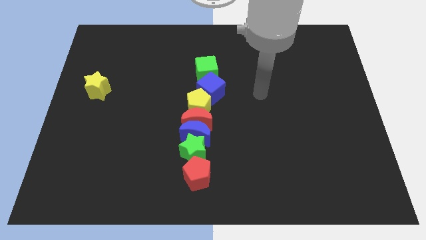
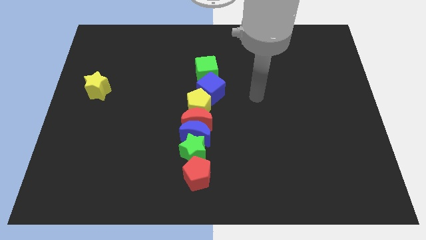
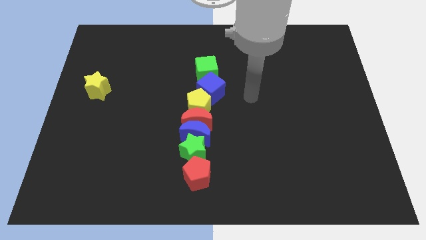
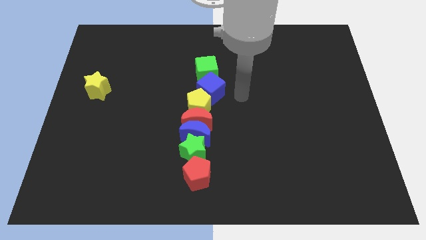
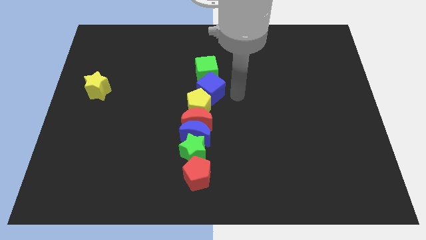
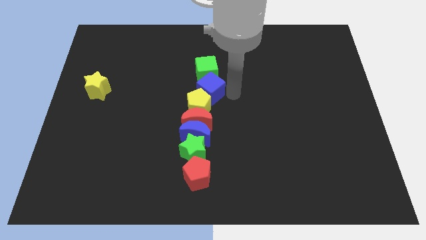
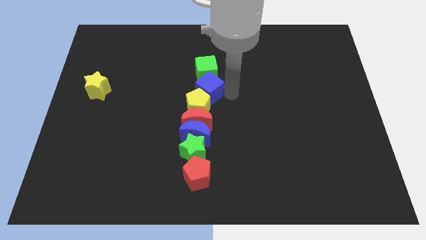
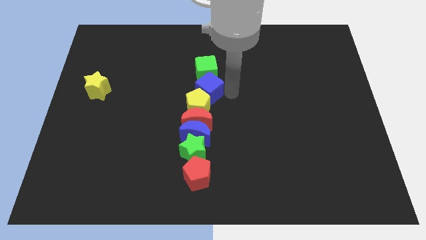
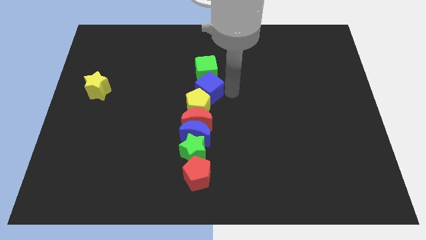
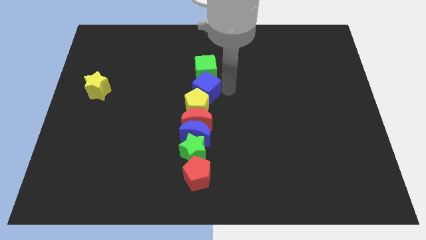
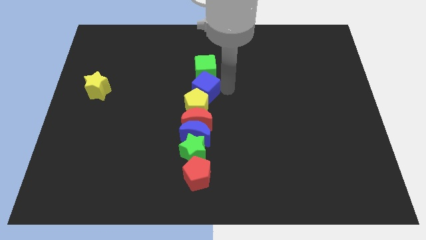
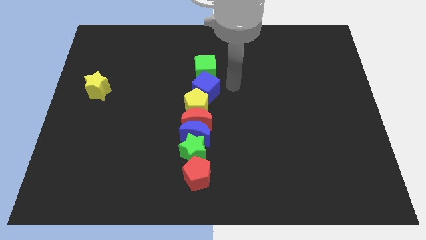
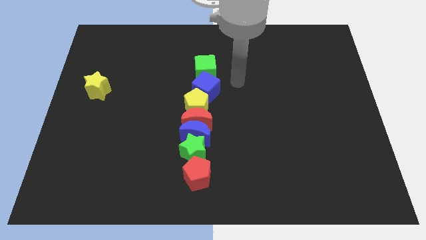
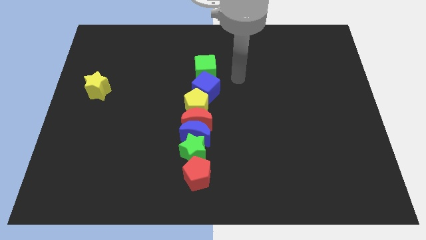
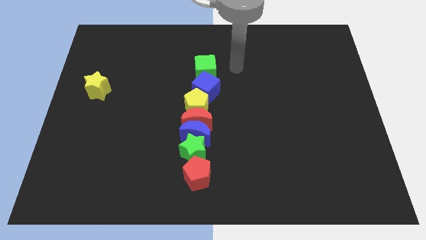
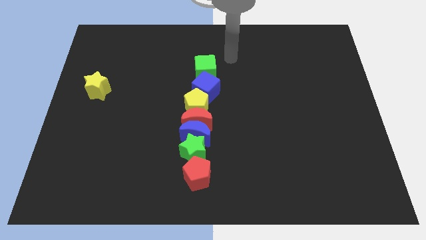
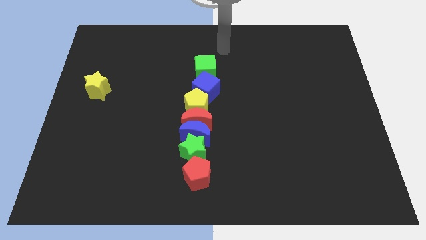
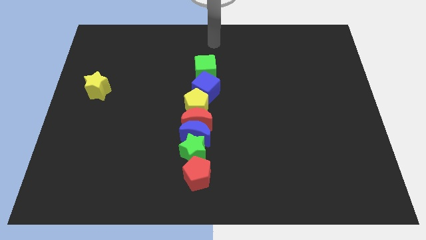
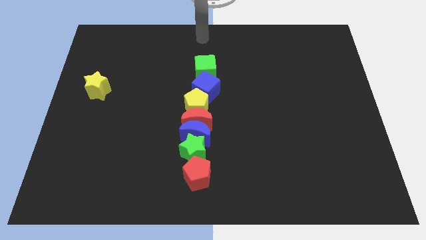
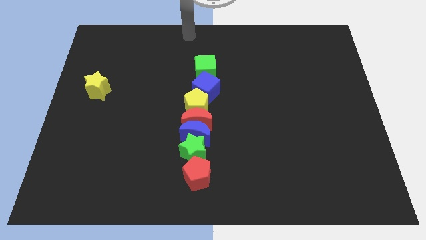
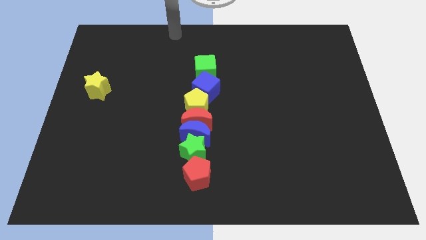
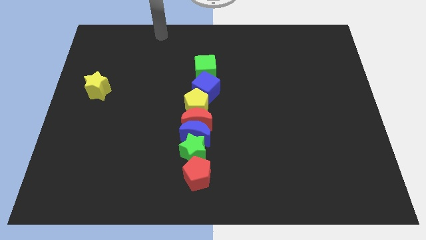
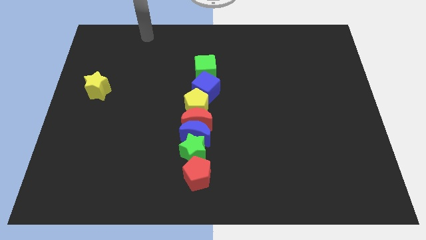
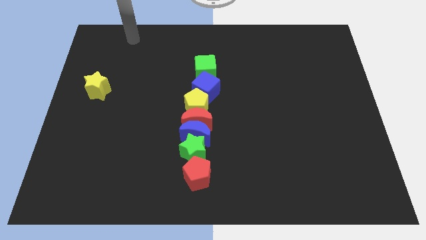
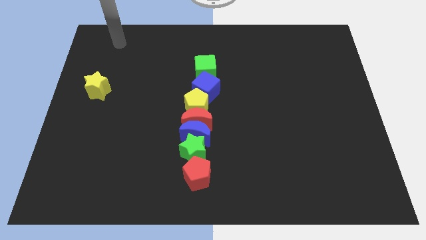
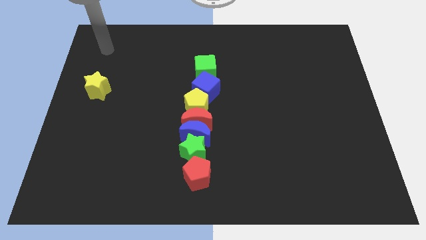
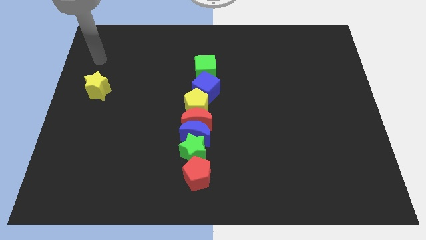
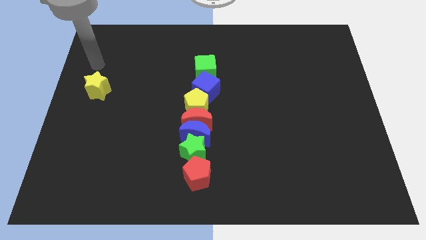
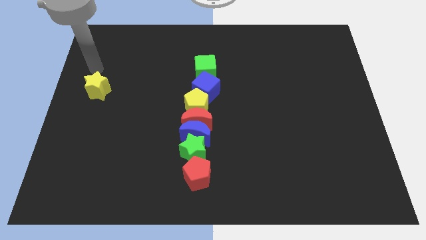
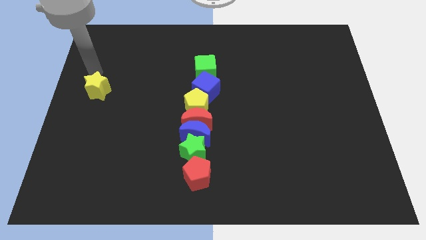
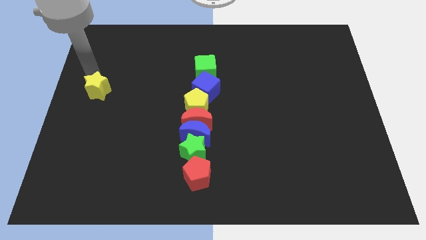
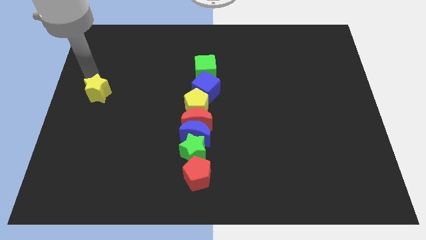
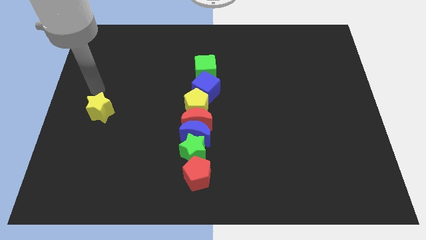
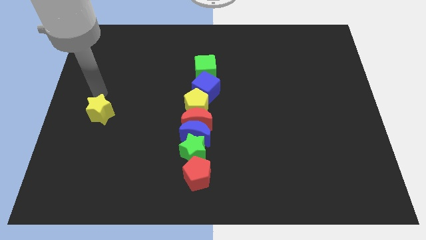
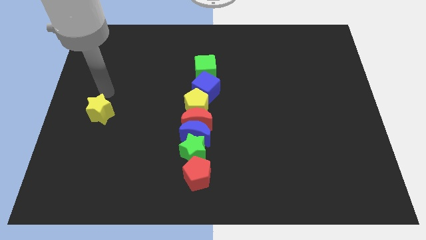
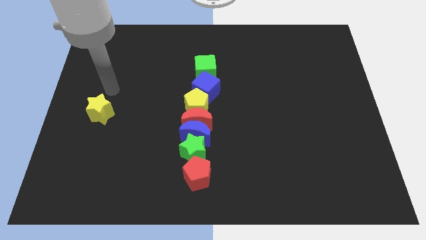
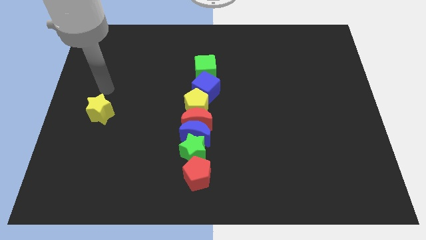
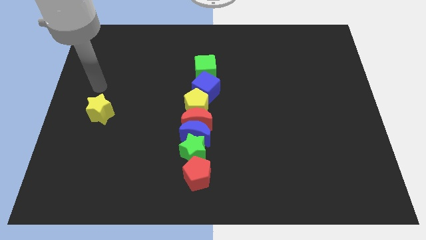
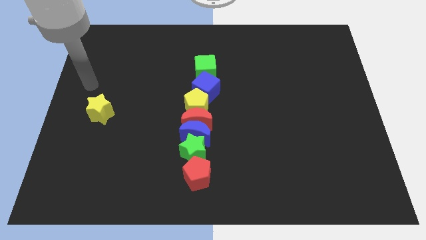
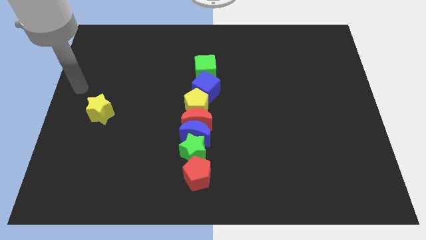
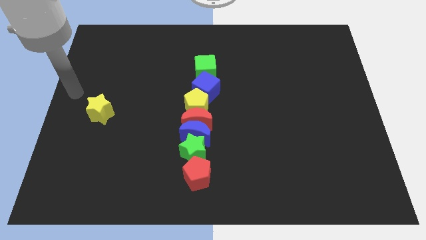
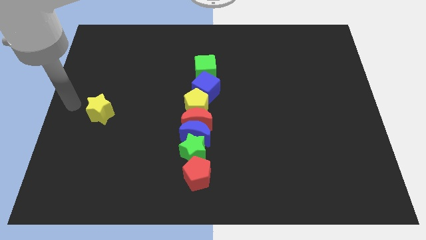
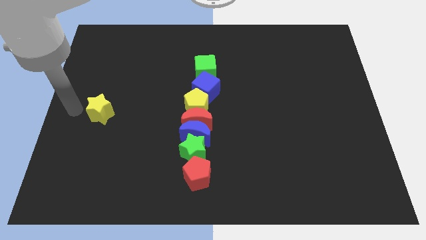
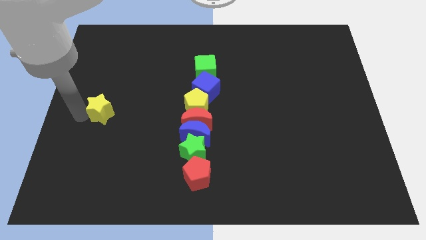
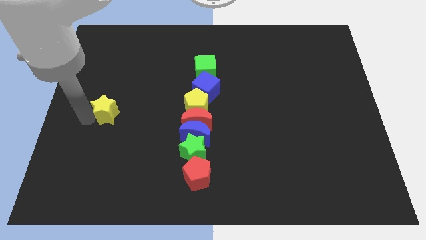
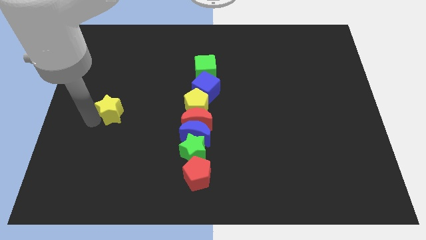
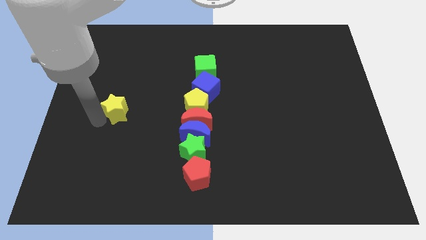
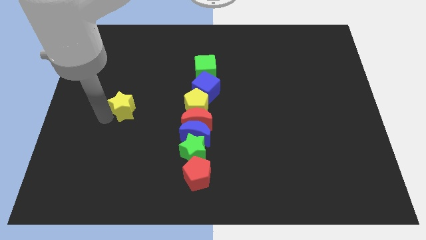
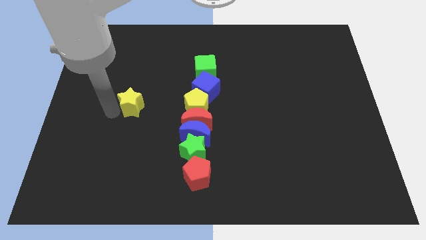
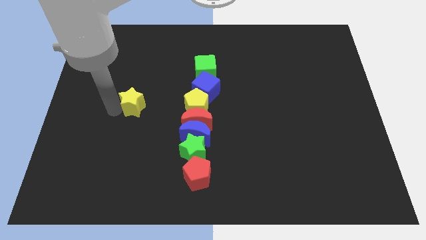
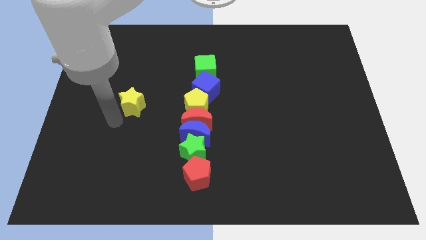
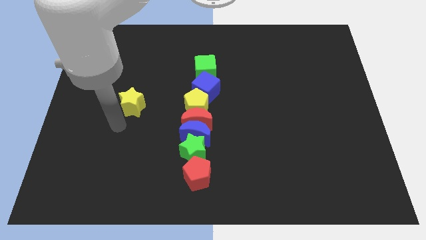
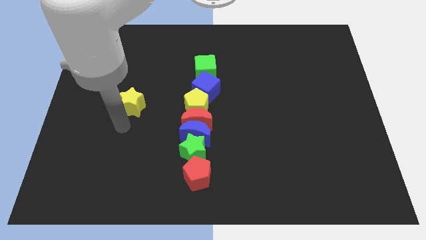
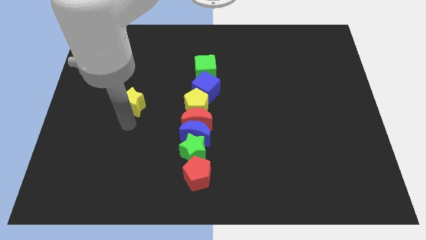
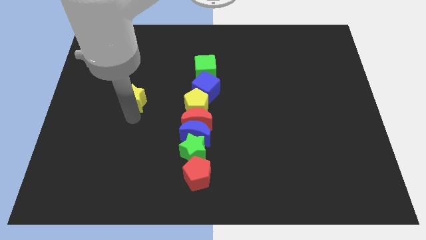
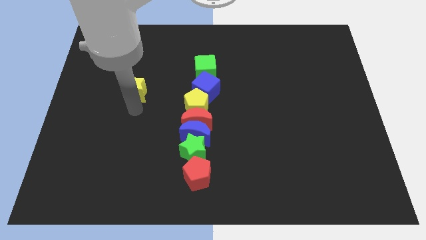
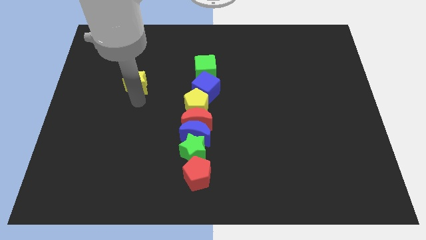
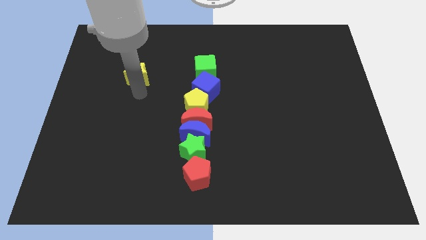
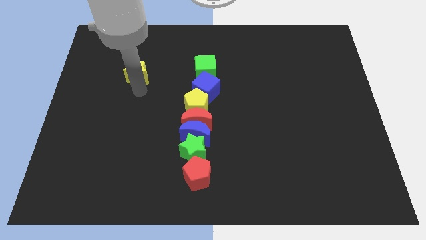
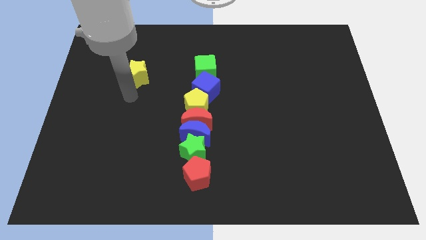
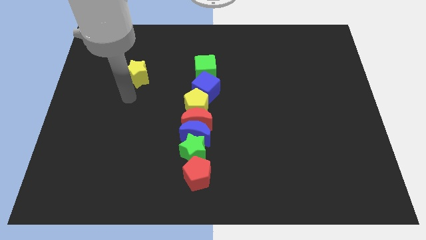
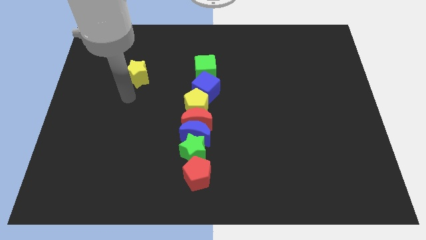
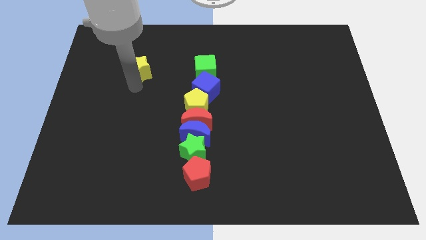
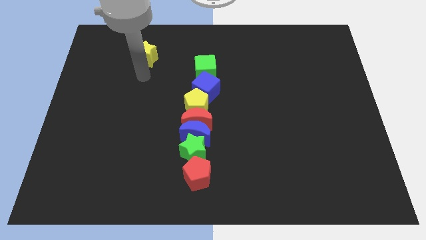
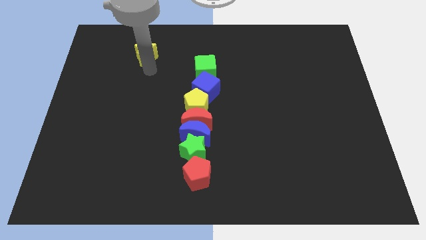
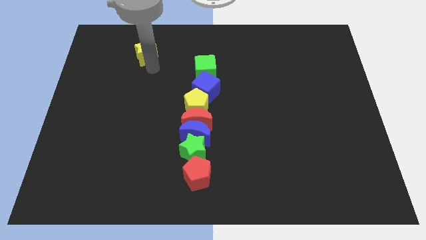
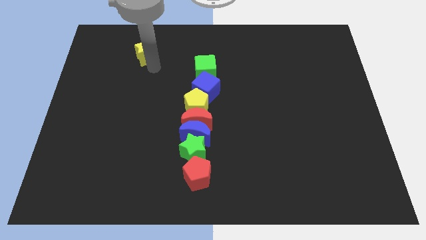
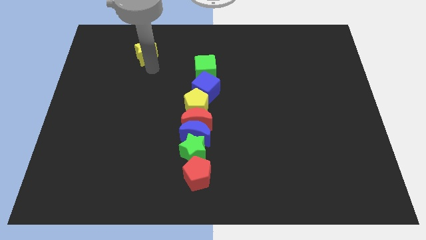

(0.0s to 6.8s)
push the yellow star diagonally top left to the green cube

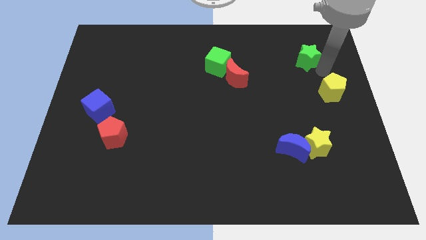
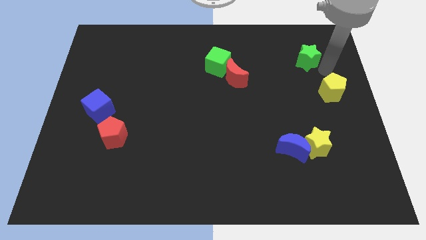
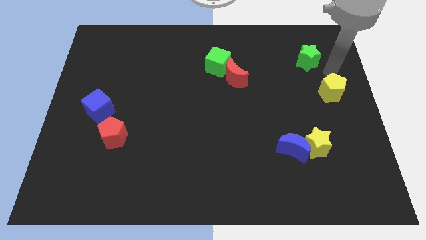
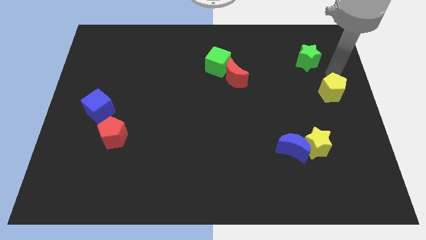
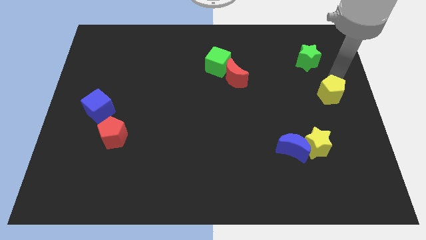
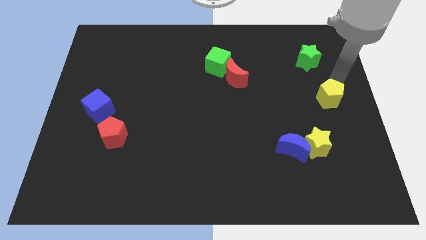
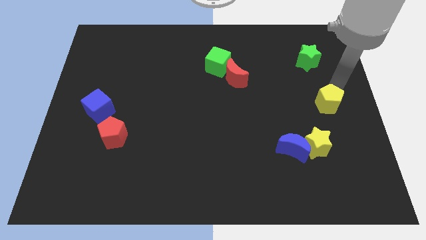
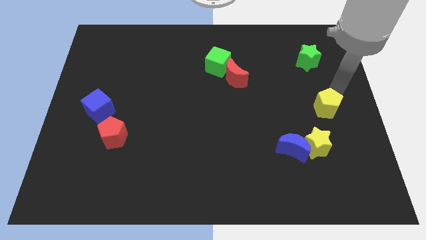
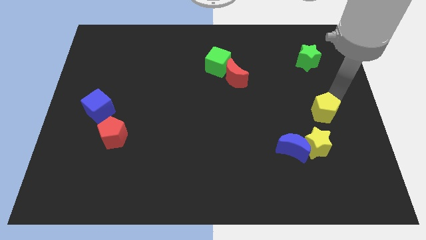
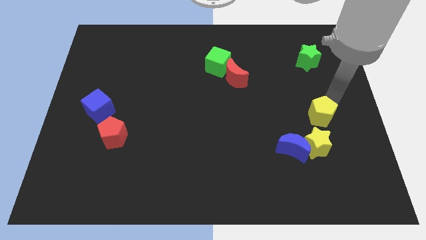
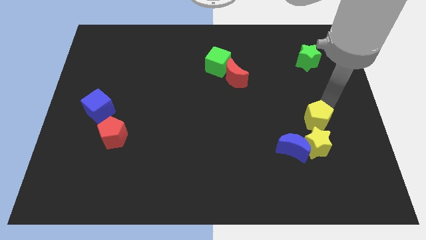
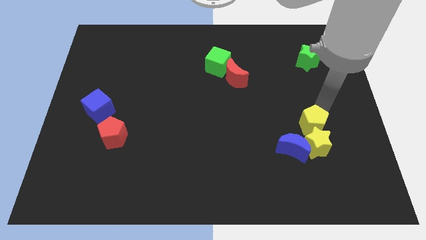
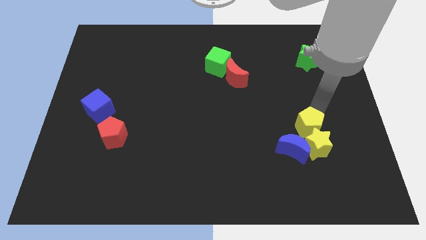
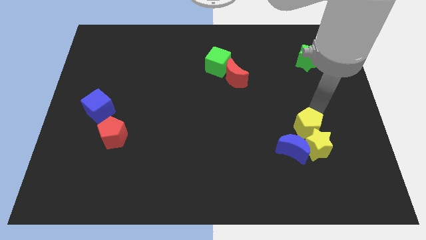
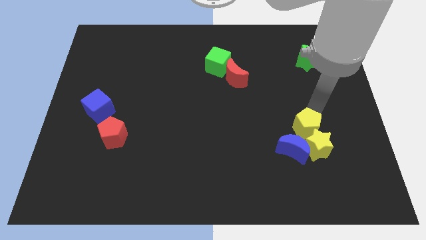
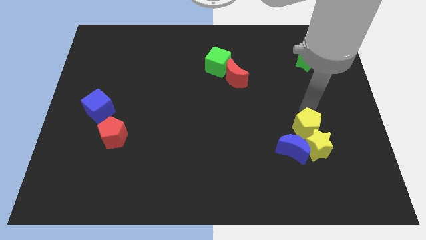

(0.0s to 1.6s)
push the yellow pentagon into the yellow star and blue moon

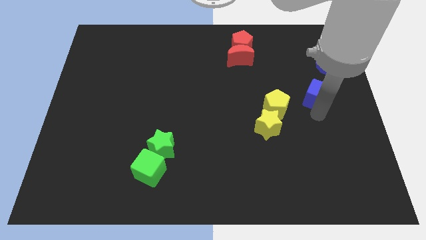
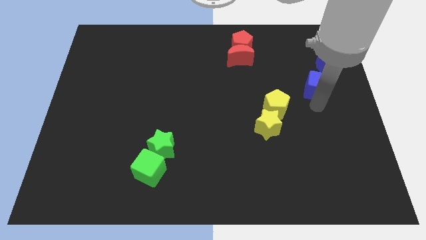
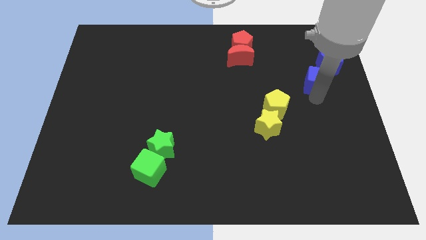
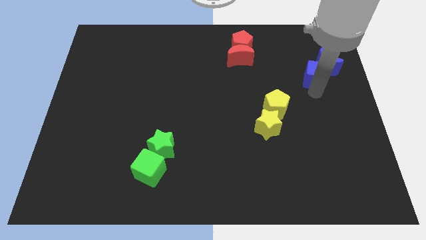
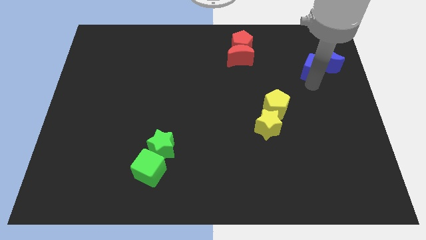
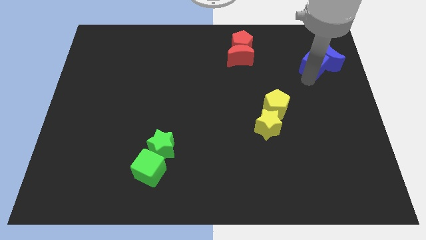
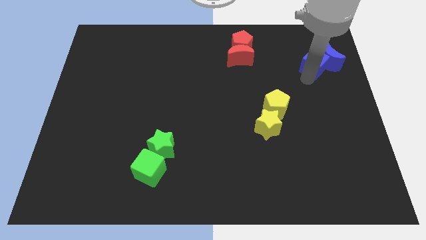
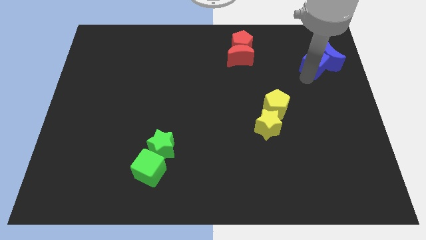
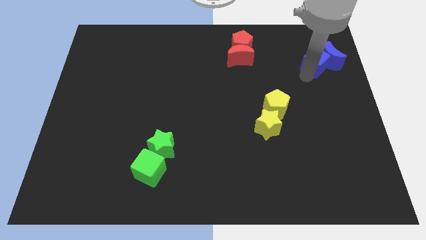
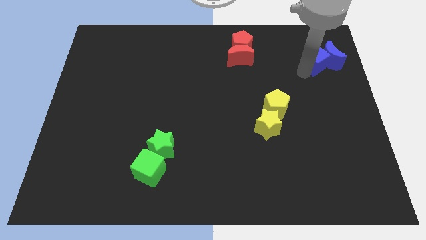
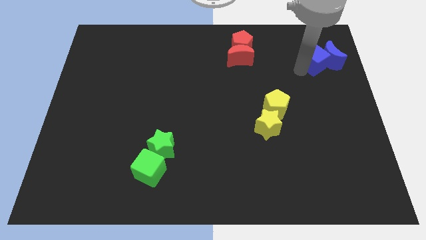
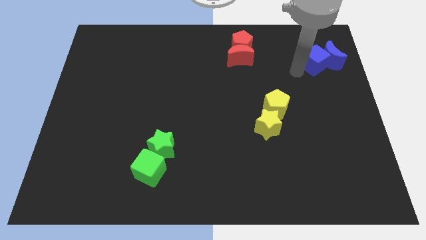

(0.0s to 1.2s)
push the blue cube into the blue moon
